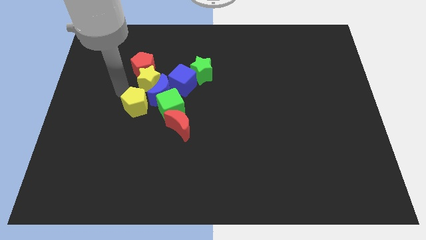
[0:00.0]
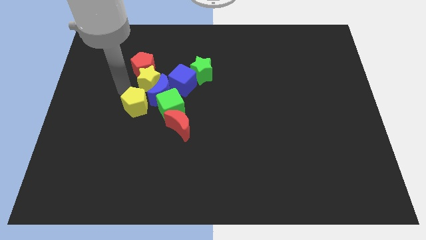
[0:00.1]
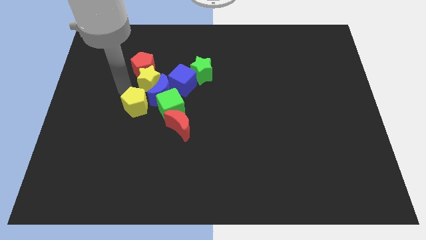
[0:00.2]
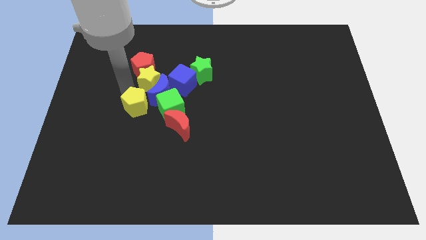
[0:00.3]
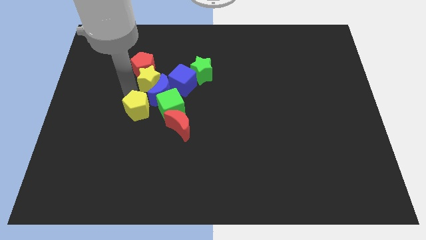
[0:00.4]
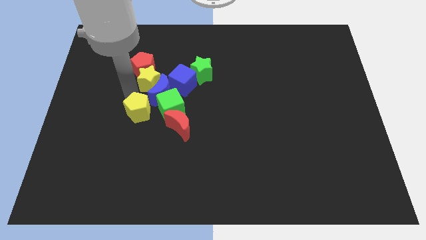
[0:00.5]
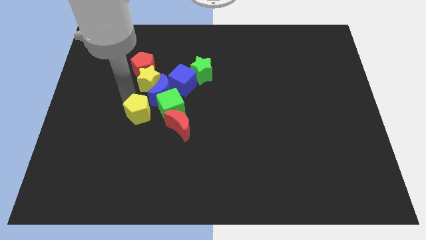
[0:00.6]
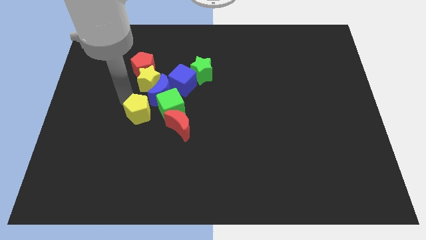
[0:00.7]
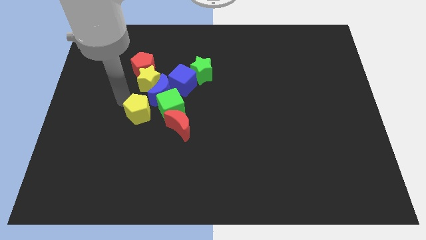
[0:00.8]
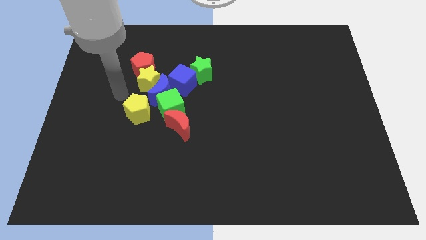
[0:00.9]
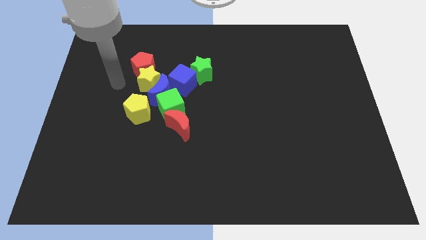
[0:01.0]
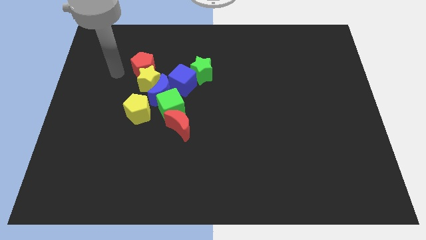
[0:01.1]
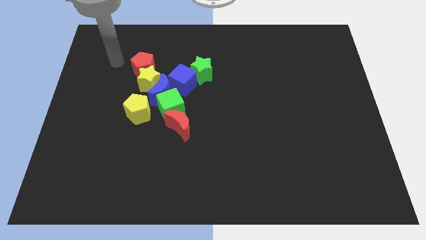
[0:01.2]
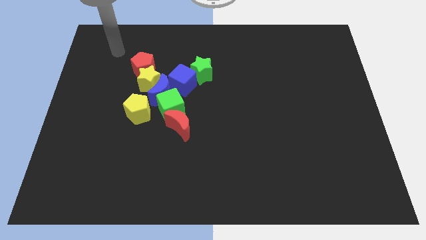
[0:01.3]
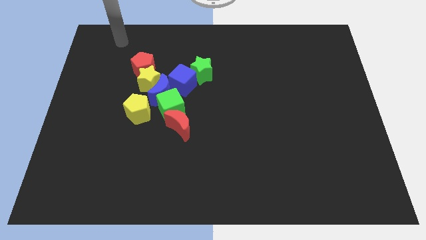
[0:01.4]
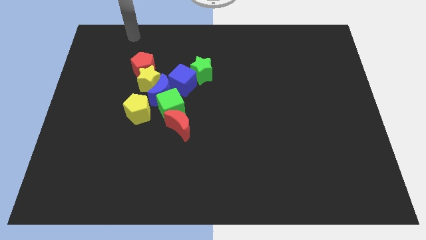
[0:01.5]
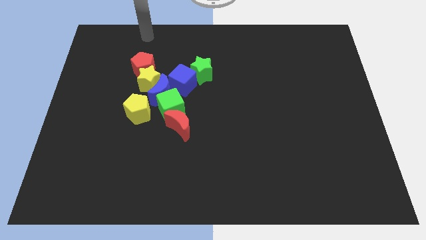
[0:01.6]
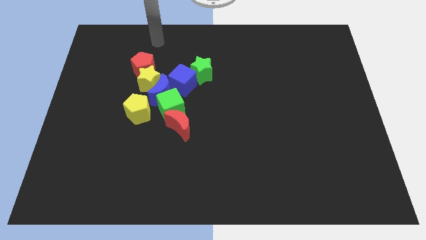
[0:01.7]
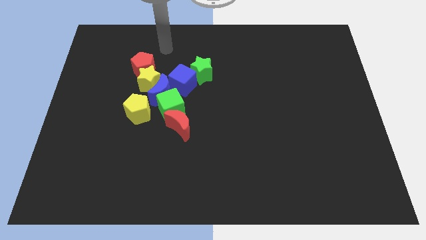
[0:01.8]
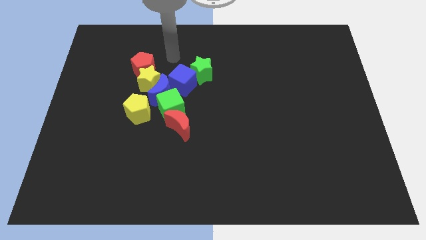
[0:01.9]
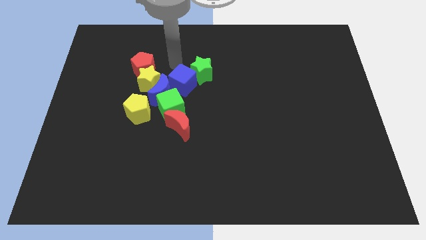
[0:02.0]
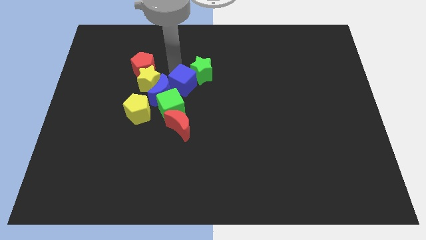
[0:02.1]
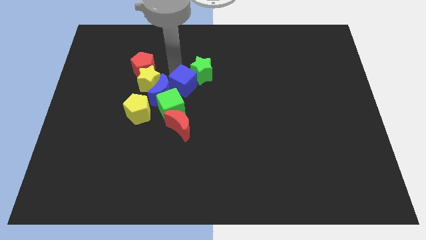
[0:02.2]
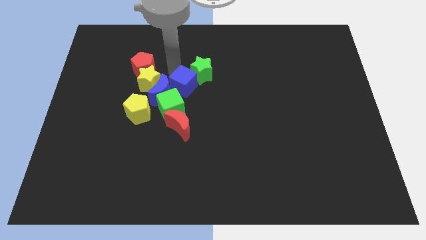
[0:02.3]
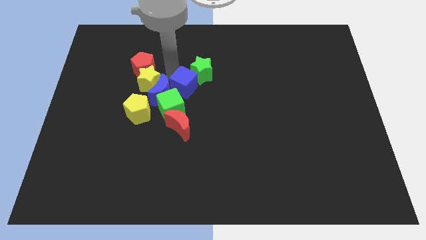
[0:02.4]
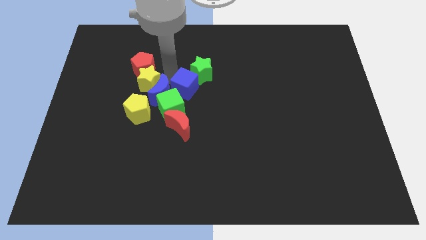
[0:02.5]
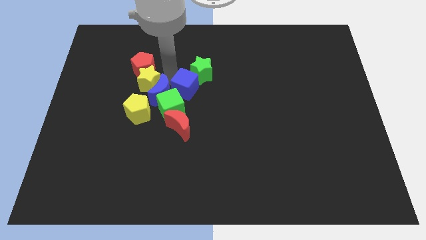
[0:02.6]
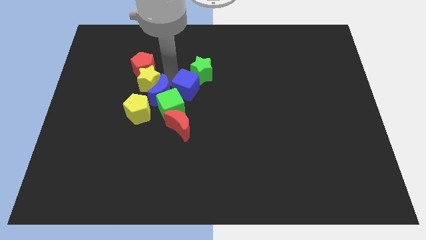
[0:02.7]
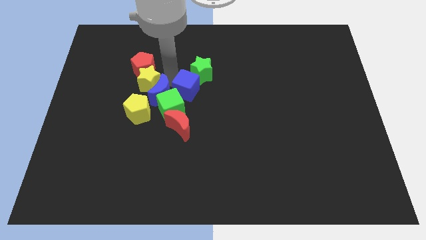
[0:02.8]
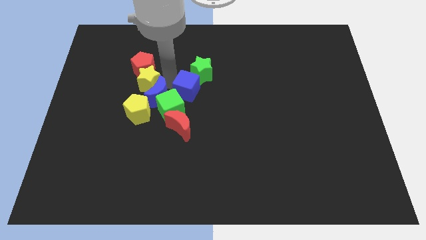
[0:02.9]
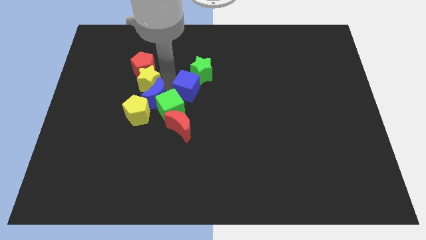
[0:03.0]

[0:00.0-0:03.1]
place your arm in between the blue moon and blue cube

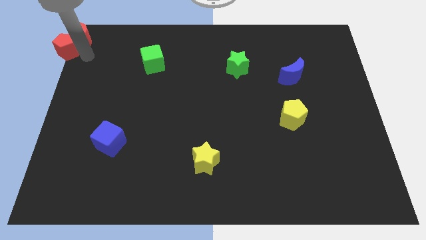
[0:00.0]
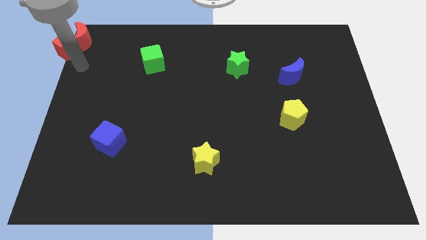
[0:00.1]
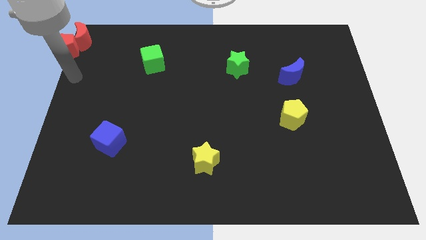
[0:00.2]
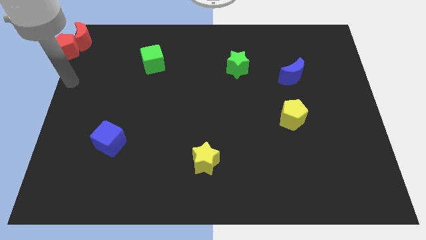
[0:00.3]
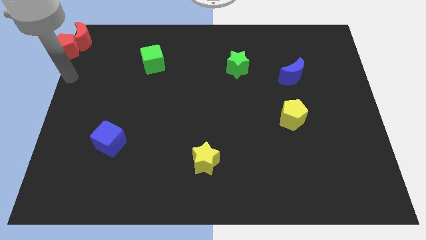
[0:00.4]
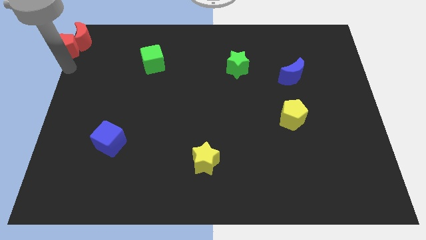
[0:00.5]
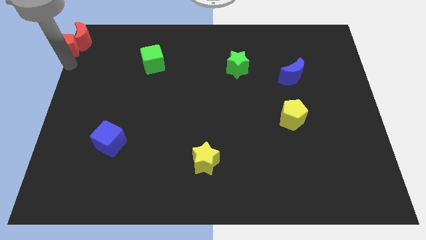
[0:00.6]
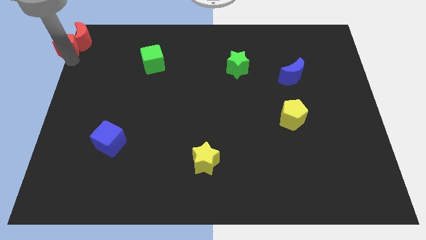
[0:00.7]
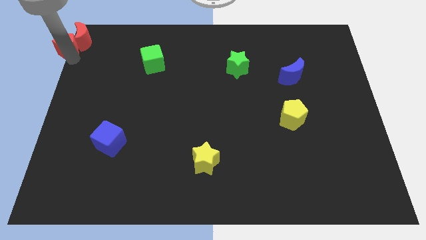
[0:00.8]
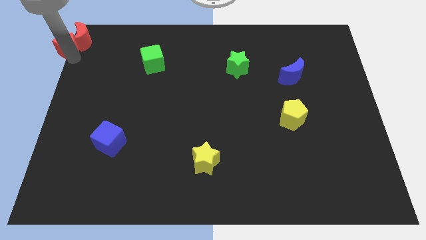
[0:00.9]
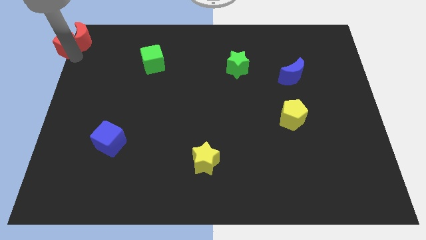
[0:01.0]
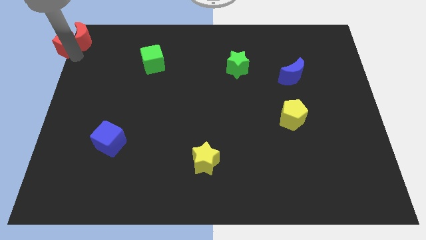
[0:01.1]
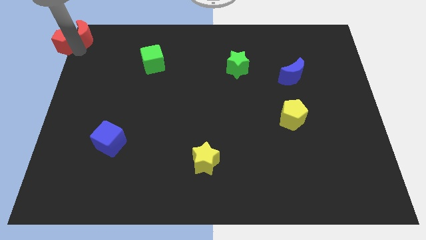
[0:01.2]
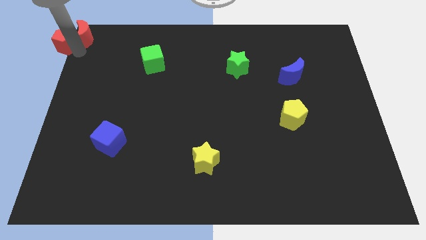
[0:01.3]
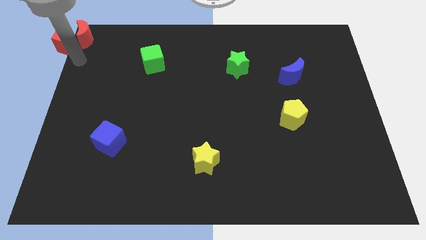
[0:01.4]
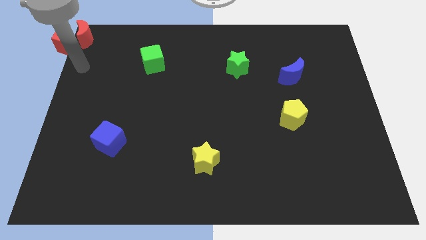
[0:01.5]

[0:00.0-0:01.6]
move red pentagon to the left of the red moon

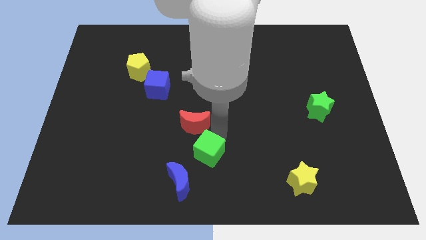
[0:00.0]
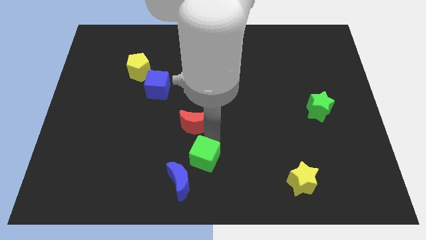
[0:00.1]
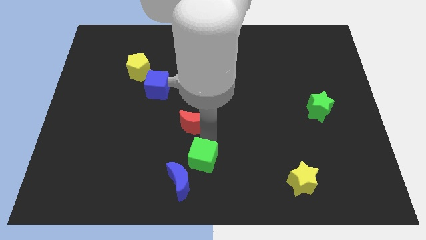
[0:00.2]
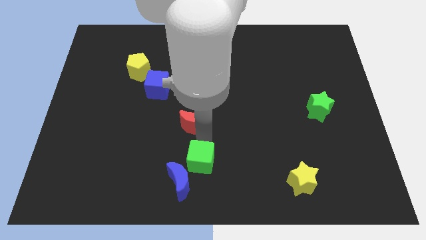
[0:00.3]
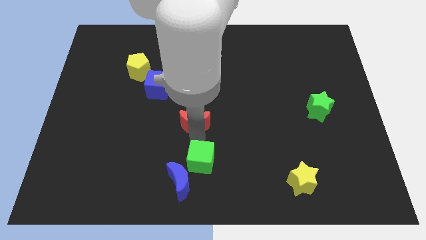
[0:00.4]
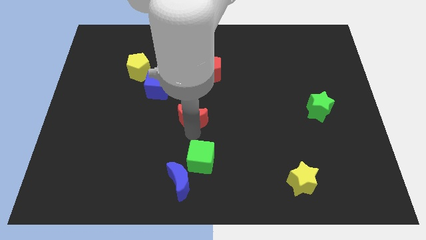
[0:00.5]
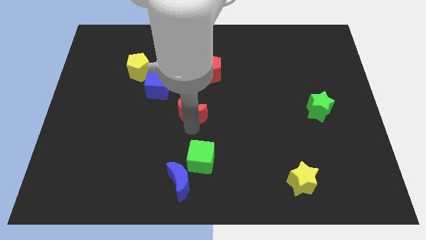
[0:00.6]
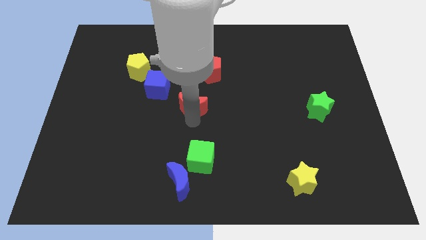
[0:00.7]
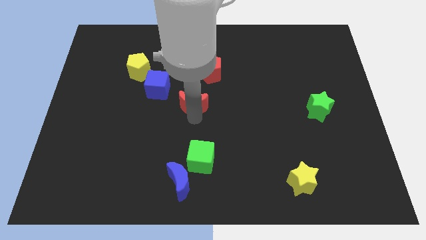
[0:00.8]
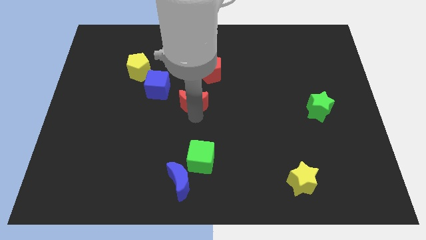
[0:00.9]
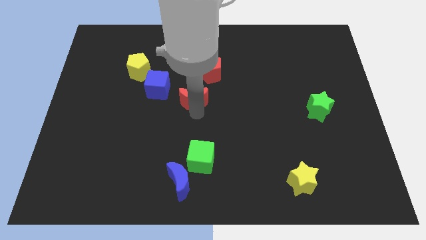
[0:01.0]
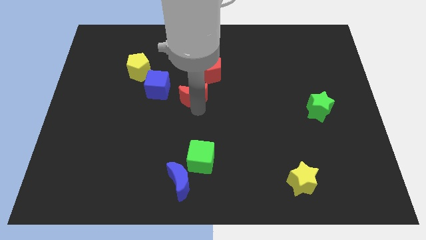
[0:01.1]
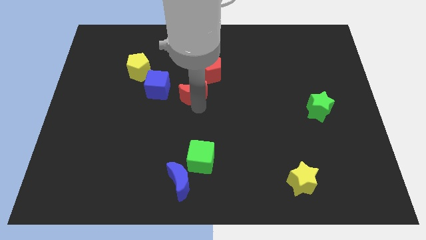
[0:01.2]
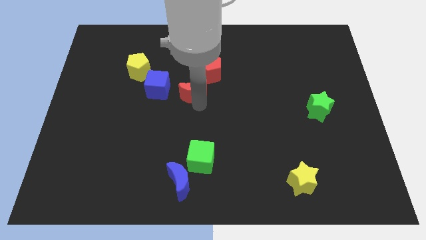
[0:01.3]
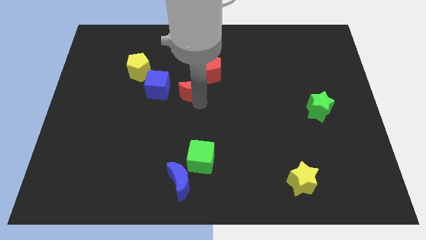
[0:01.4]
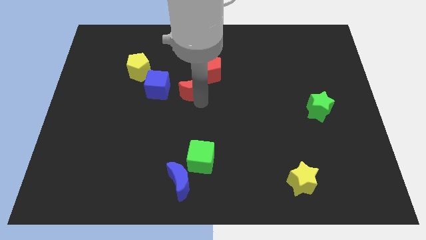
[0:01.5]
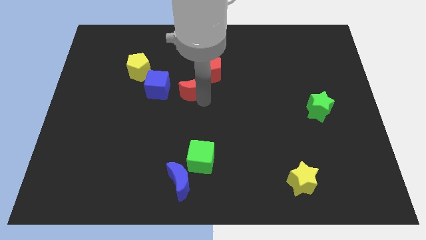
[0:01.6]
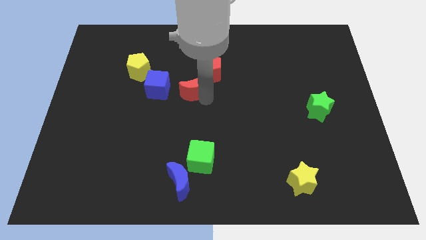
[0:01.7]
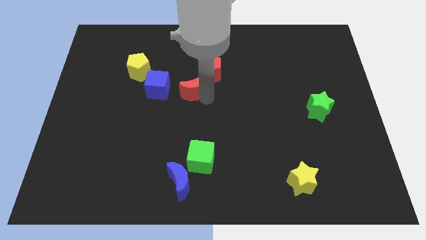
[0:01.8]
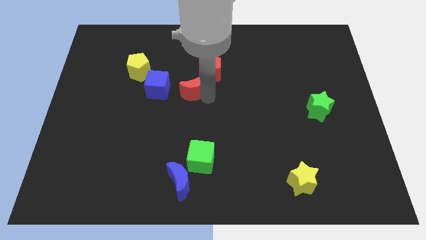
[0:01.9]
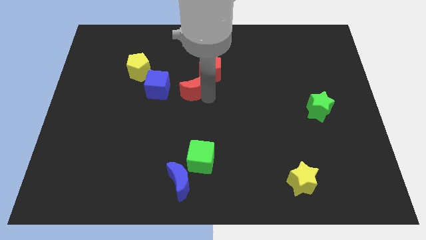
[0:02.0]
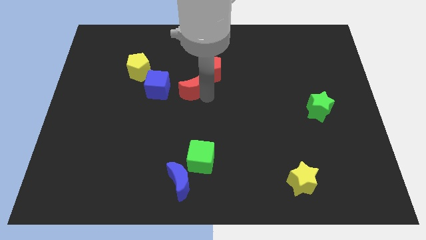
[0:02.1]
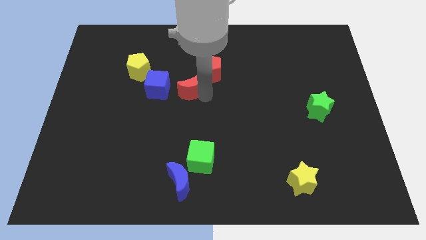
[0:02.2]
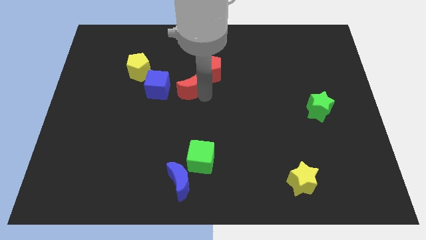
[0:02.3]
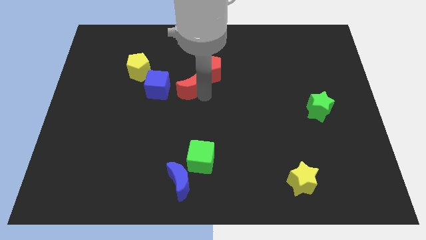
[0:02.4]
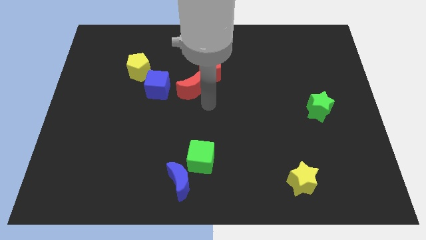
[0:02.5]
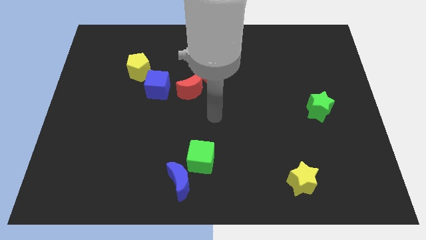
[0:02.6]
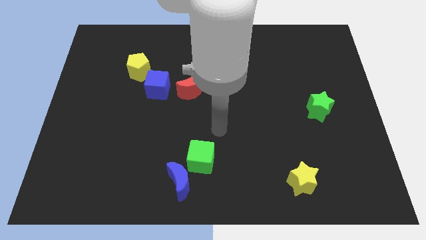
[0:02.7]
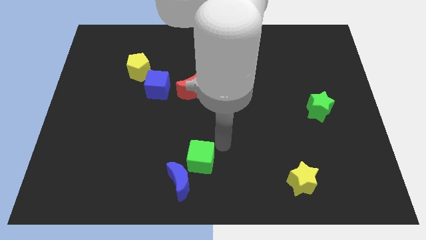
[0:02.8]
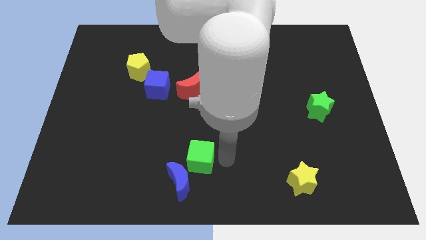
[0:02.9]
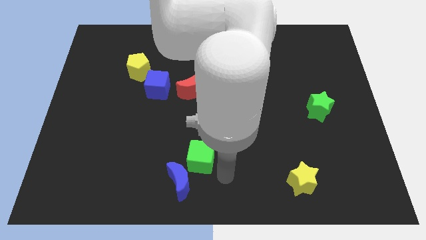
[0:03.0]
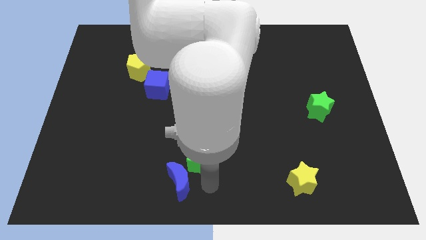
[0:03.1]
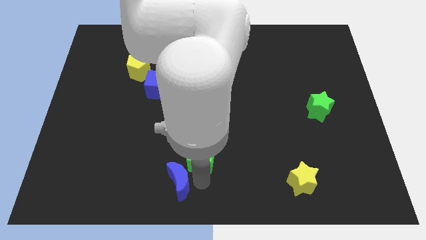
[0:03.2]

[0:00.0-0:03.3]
place the red moon to the bottom left of the red pentagon

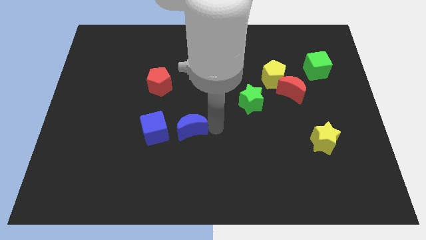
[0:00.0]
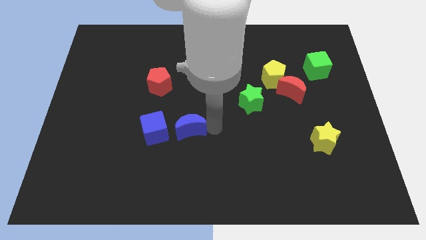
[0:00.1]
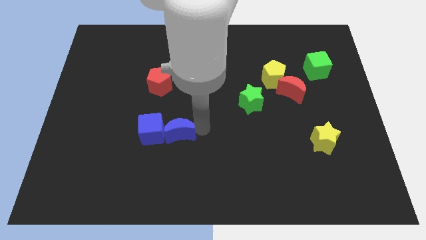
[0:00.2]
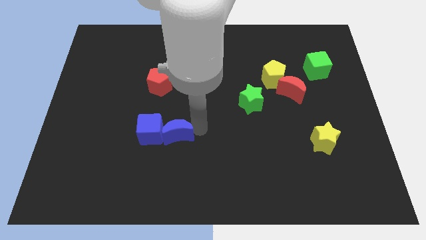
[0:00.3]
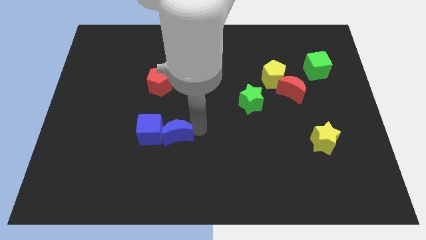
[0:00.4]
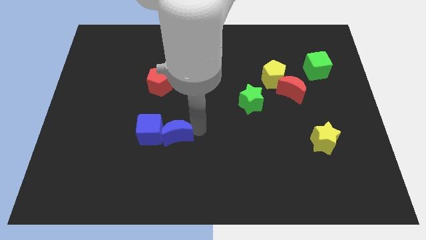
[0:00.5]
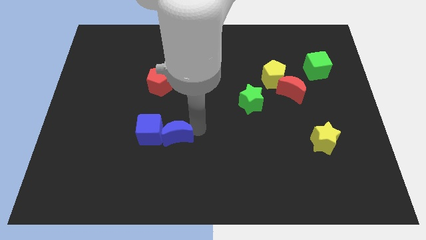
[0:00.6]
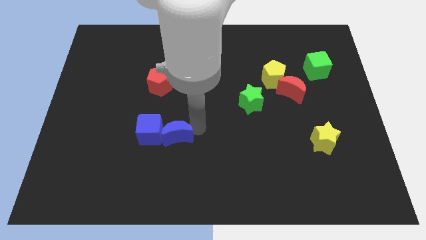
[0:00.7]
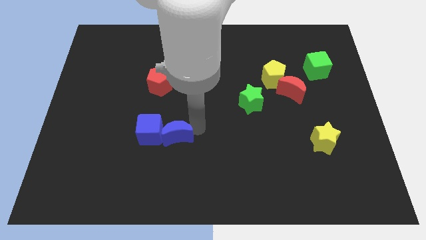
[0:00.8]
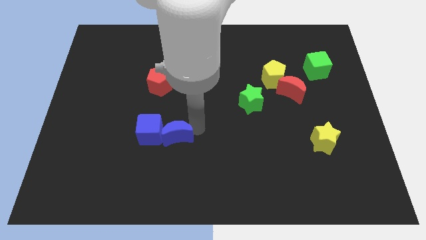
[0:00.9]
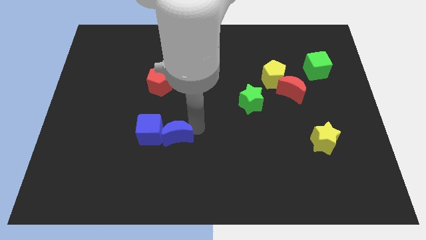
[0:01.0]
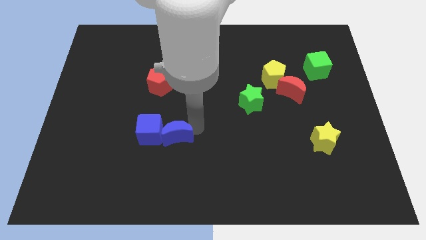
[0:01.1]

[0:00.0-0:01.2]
push the blue moon into the blue cube
